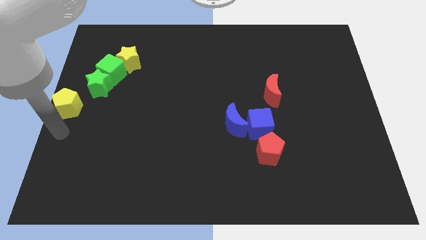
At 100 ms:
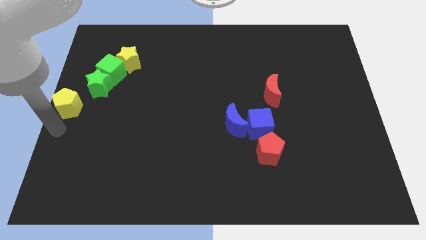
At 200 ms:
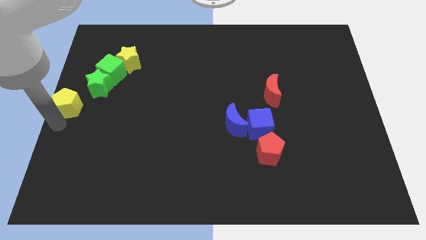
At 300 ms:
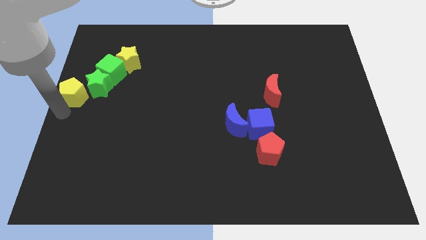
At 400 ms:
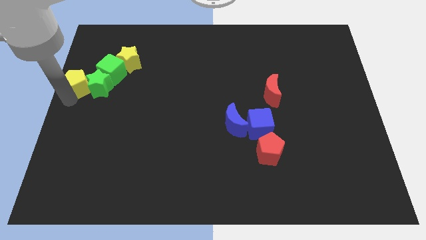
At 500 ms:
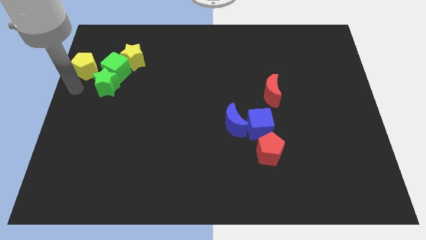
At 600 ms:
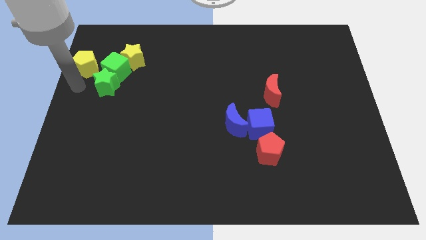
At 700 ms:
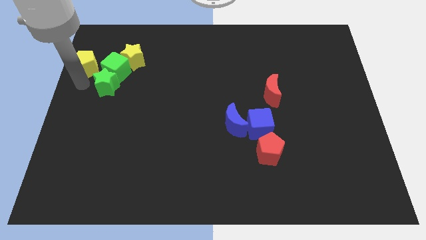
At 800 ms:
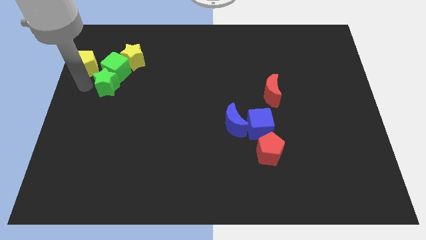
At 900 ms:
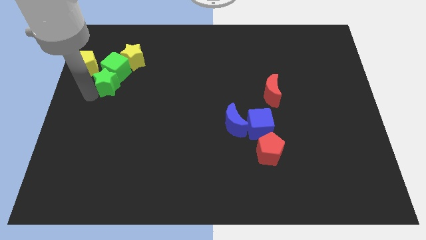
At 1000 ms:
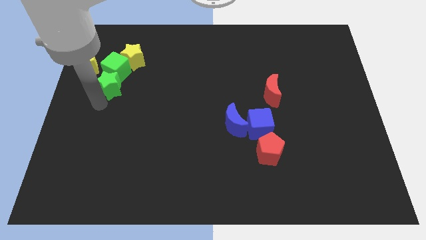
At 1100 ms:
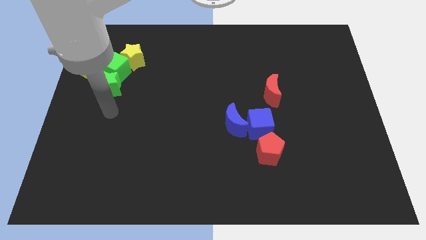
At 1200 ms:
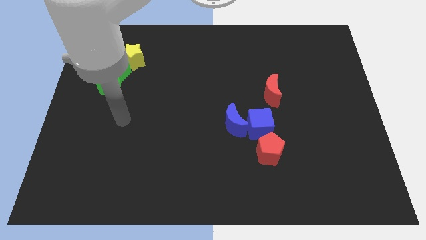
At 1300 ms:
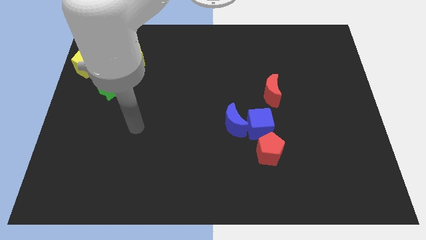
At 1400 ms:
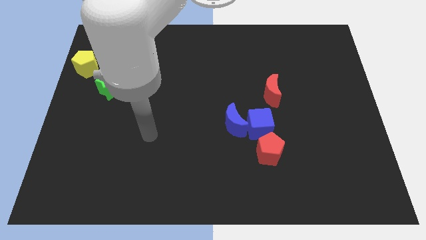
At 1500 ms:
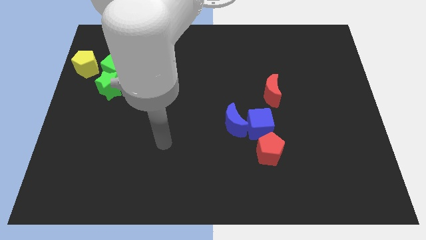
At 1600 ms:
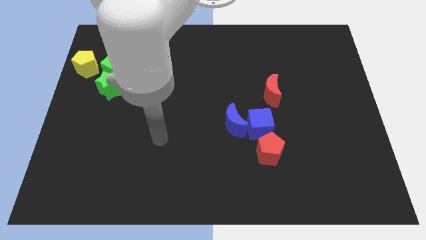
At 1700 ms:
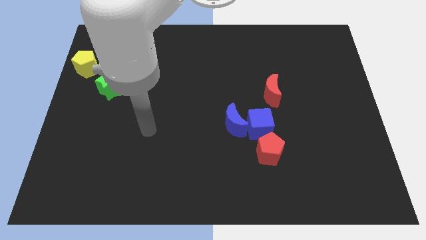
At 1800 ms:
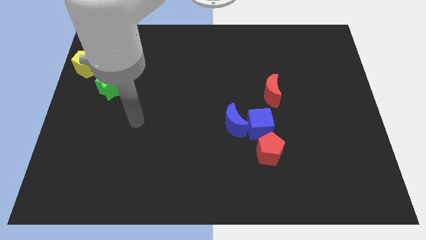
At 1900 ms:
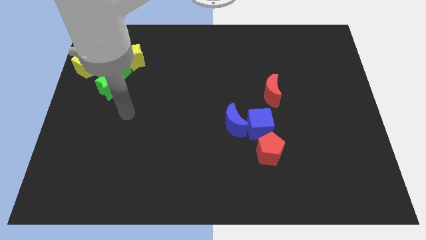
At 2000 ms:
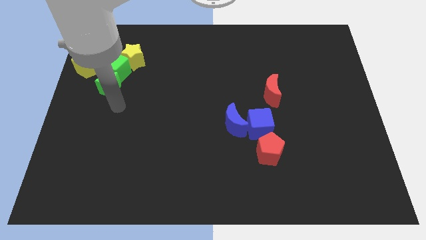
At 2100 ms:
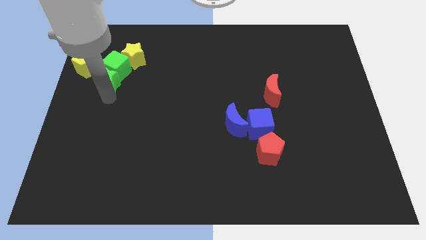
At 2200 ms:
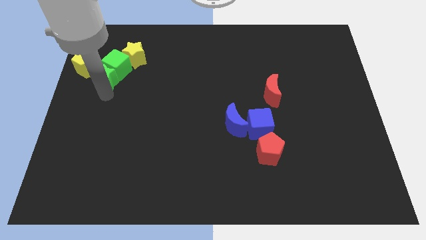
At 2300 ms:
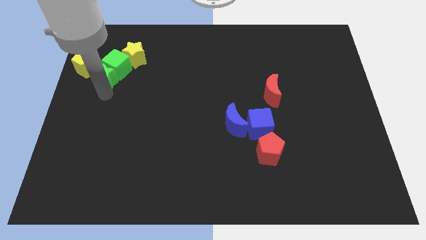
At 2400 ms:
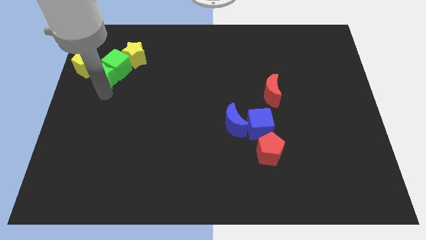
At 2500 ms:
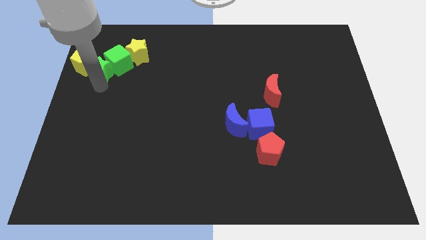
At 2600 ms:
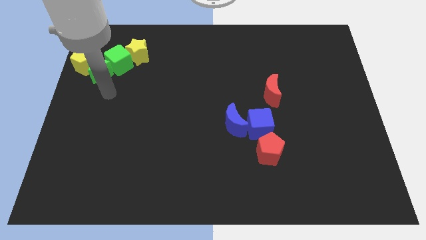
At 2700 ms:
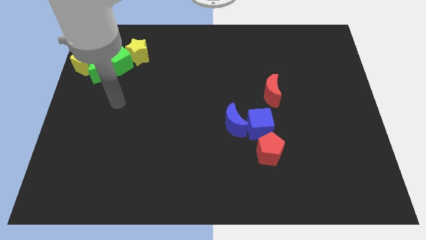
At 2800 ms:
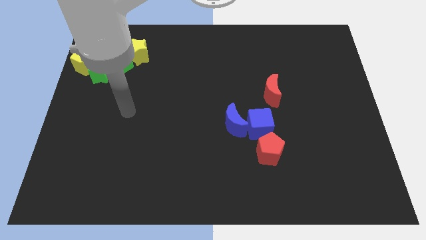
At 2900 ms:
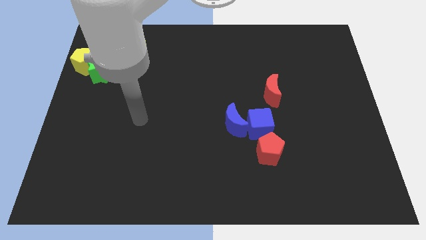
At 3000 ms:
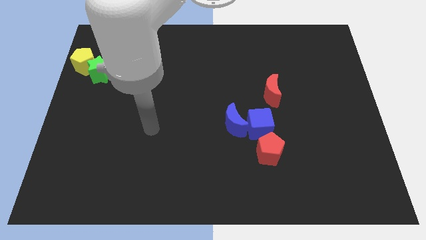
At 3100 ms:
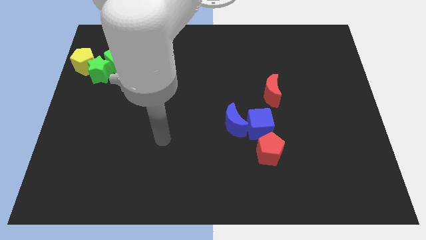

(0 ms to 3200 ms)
push green and yellow blocks towards the top center of the board

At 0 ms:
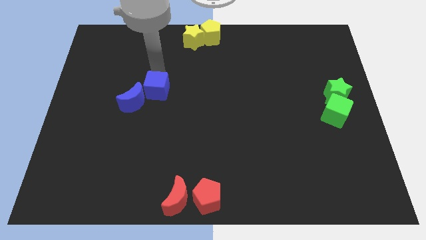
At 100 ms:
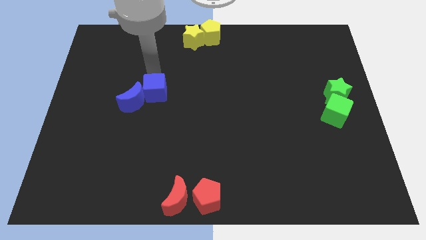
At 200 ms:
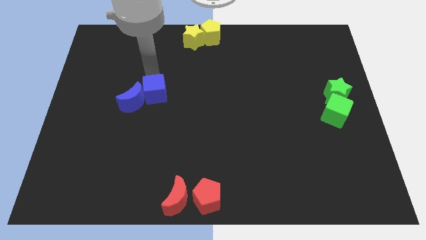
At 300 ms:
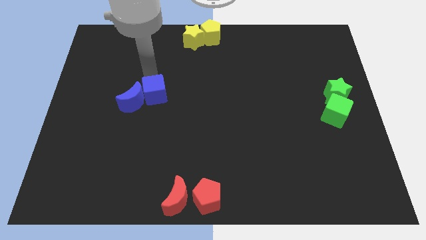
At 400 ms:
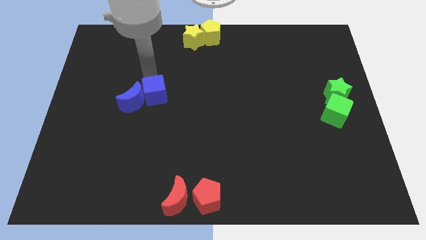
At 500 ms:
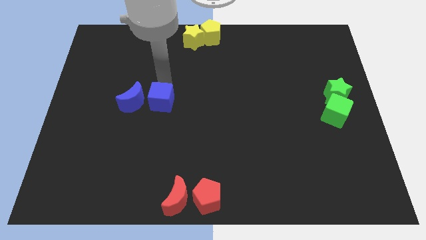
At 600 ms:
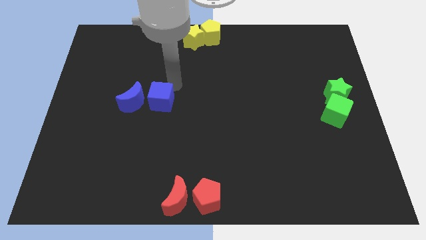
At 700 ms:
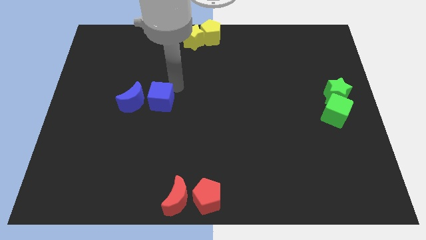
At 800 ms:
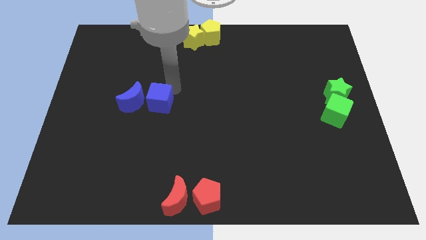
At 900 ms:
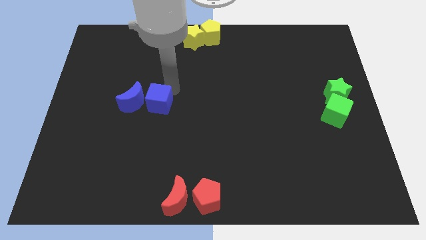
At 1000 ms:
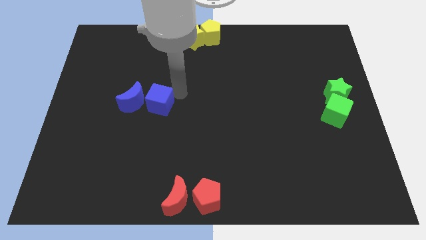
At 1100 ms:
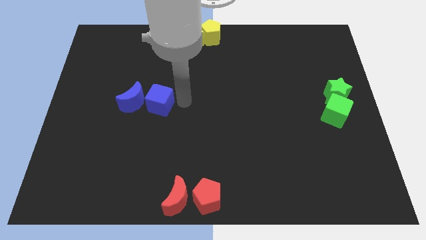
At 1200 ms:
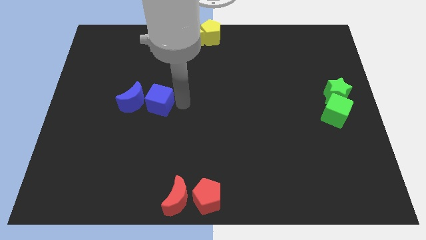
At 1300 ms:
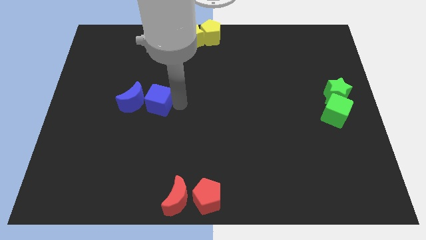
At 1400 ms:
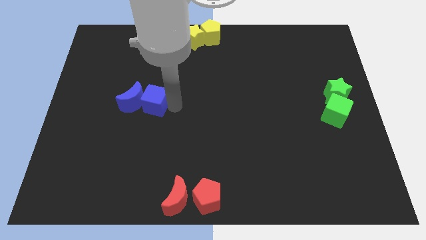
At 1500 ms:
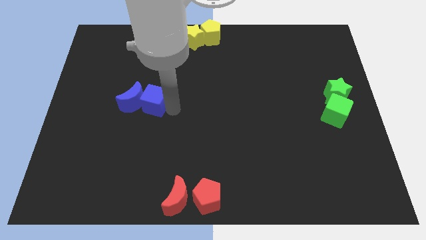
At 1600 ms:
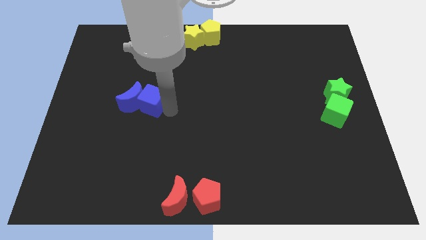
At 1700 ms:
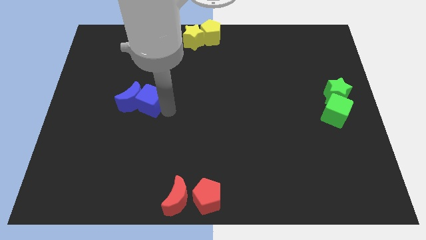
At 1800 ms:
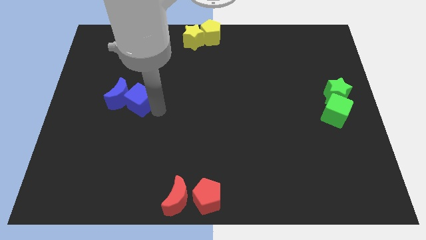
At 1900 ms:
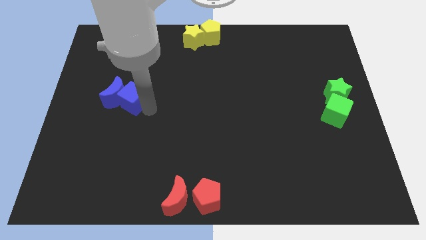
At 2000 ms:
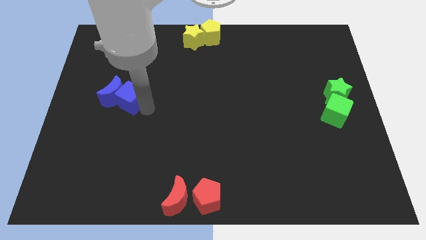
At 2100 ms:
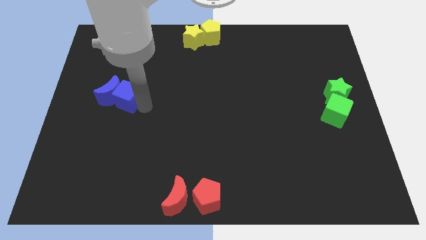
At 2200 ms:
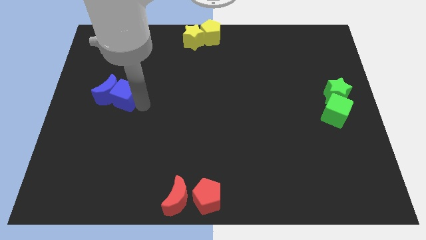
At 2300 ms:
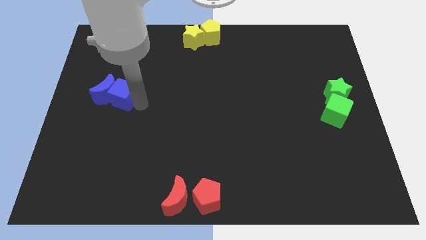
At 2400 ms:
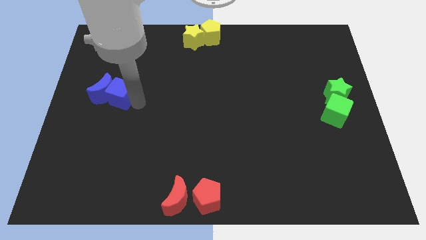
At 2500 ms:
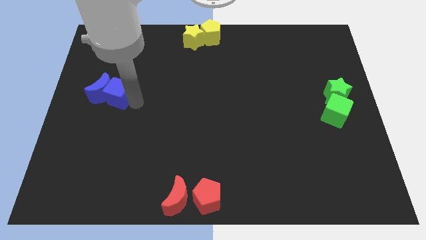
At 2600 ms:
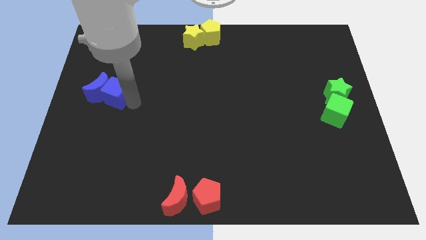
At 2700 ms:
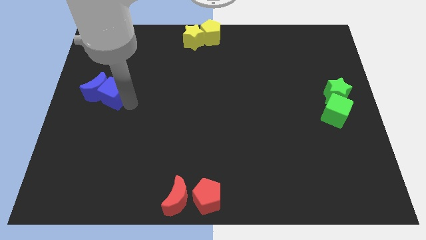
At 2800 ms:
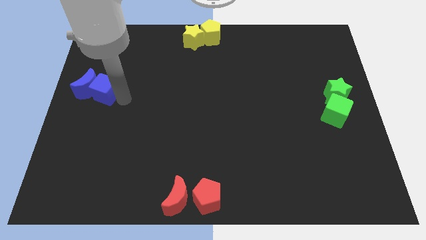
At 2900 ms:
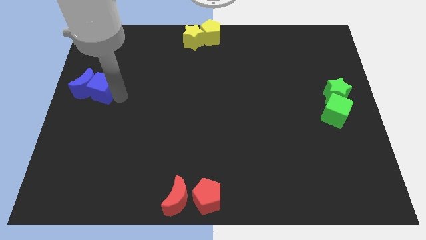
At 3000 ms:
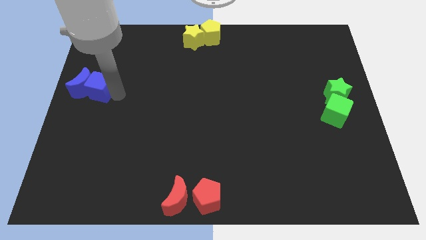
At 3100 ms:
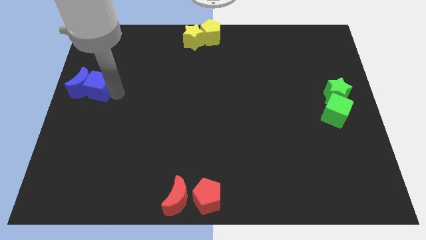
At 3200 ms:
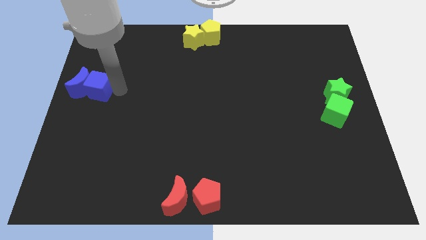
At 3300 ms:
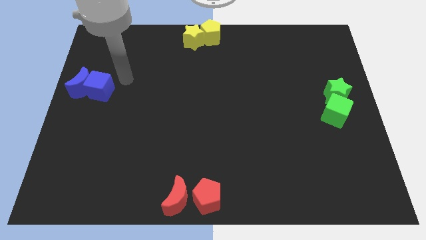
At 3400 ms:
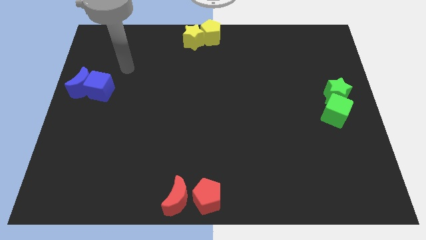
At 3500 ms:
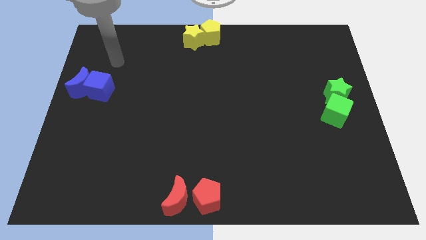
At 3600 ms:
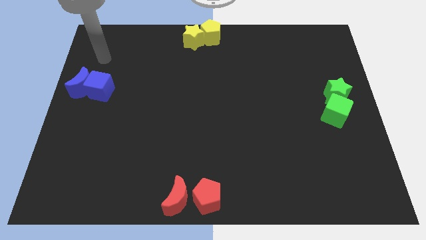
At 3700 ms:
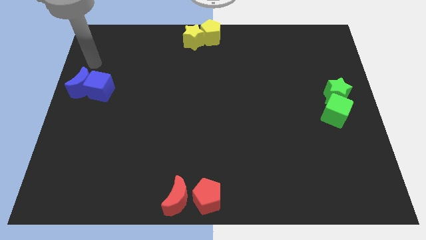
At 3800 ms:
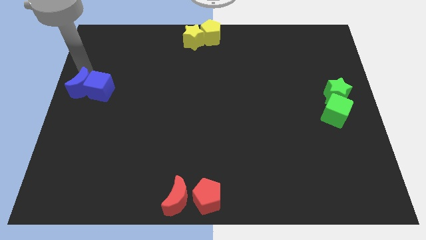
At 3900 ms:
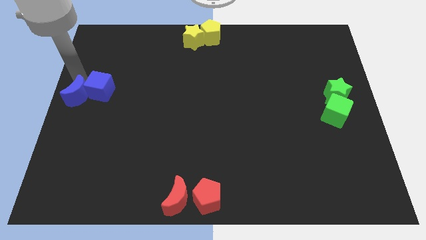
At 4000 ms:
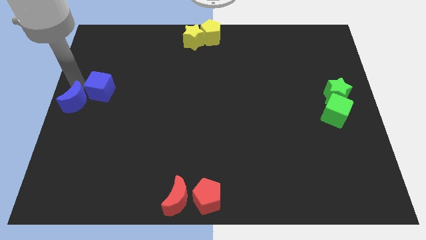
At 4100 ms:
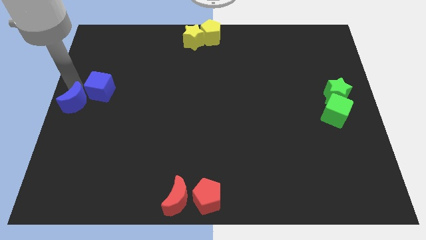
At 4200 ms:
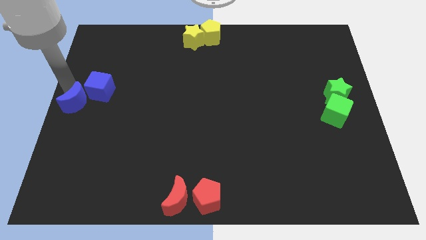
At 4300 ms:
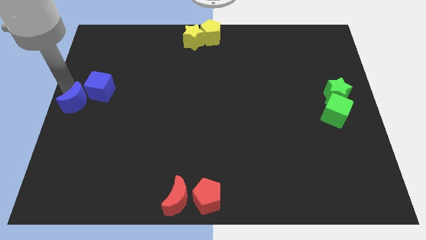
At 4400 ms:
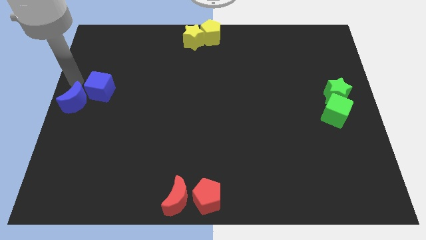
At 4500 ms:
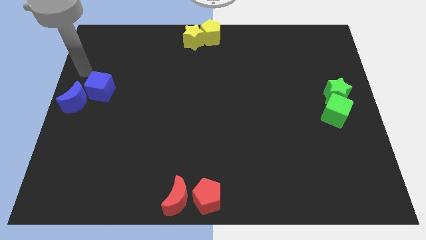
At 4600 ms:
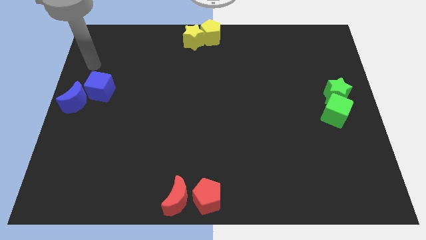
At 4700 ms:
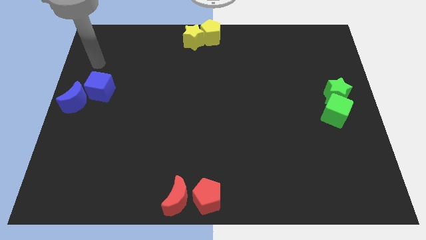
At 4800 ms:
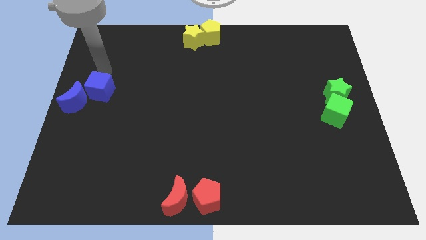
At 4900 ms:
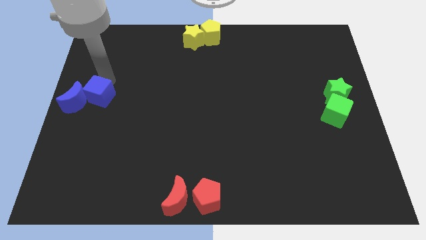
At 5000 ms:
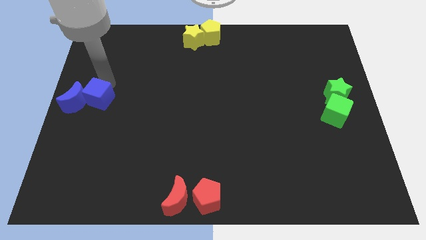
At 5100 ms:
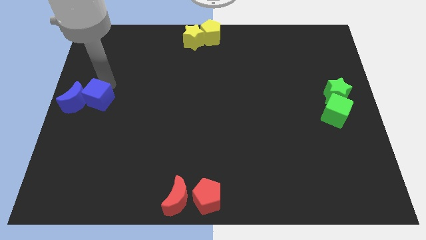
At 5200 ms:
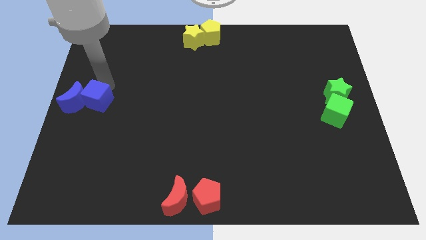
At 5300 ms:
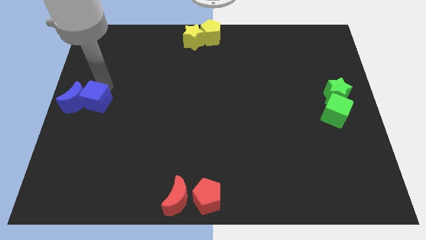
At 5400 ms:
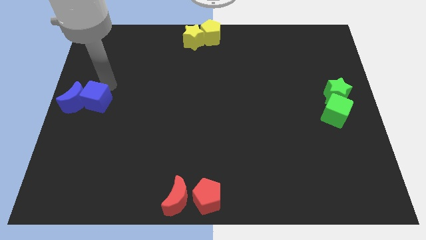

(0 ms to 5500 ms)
move the blue cube and blue moon towards the left center of the board

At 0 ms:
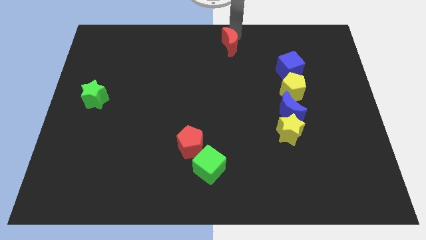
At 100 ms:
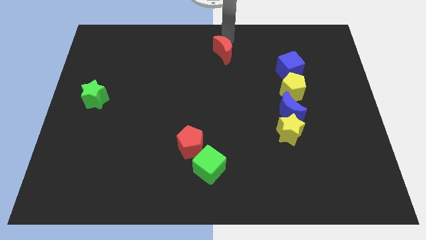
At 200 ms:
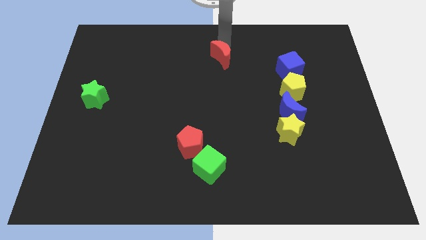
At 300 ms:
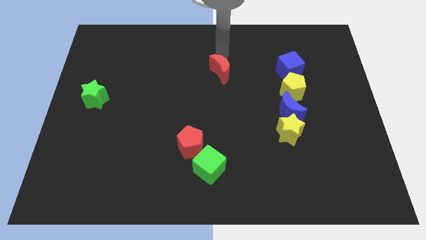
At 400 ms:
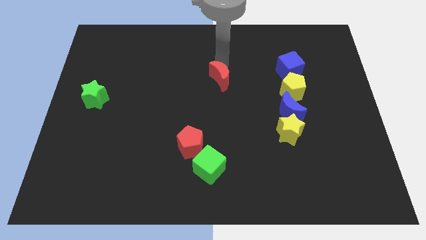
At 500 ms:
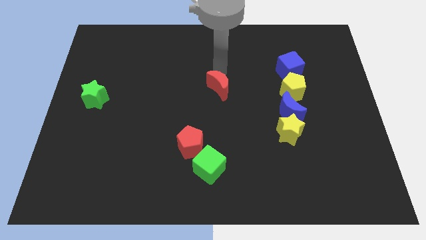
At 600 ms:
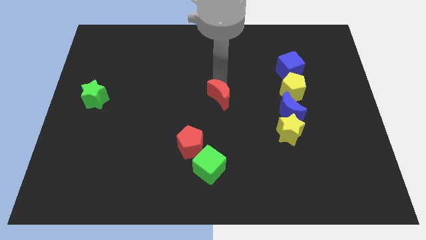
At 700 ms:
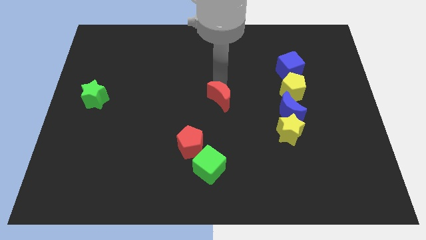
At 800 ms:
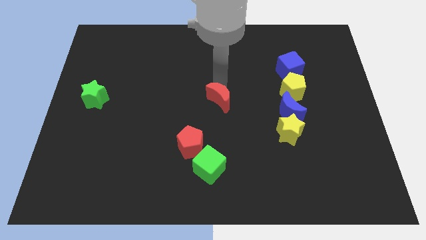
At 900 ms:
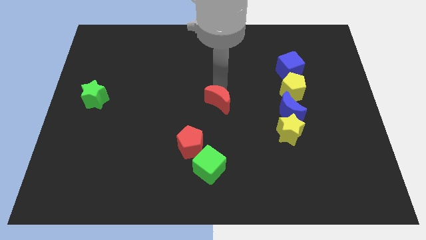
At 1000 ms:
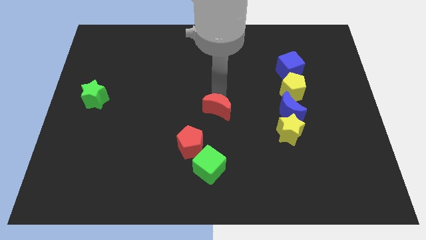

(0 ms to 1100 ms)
place red moon to the center of the board
